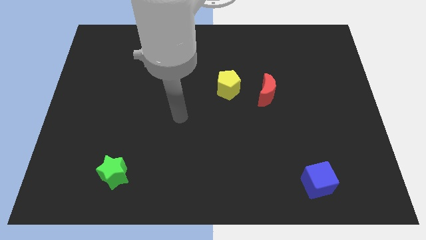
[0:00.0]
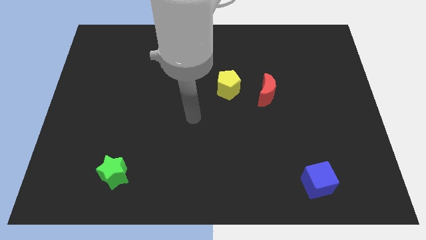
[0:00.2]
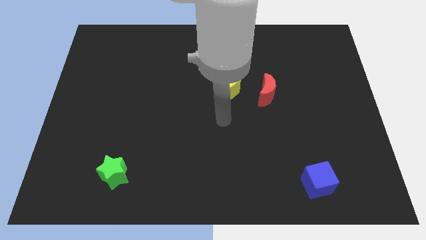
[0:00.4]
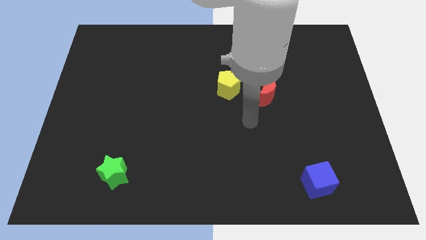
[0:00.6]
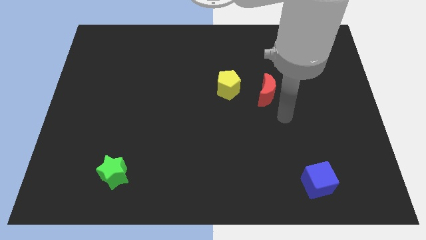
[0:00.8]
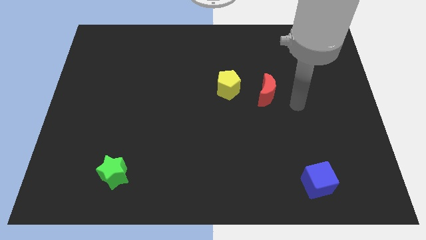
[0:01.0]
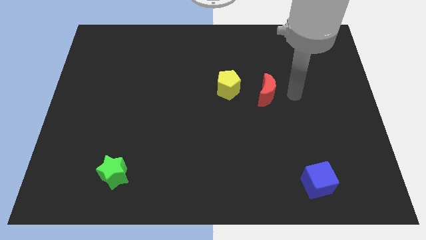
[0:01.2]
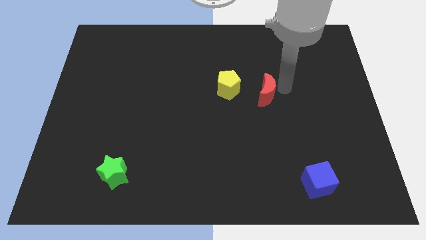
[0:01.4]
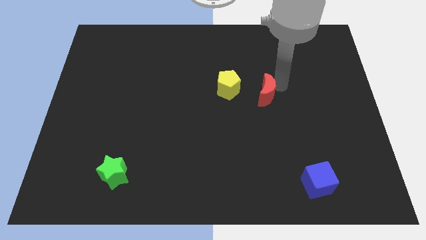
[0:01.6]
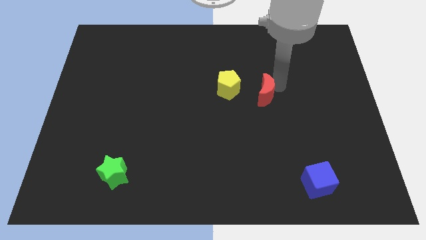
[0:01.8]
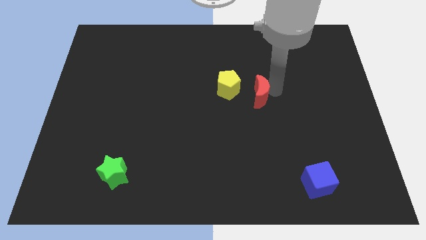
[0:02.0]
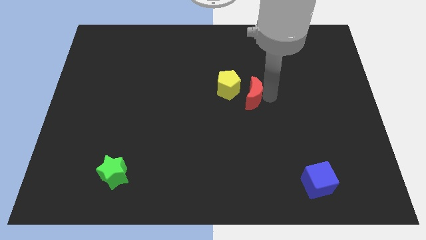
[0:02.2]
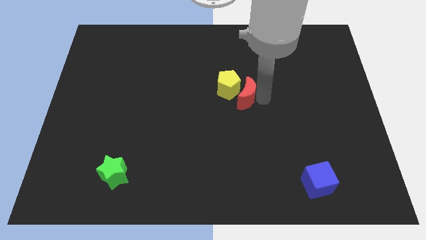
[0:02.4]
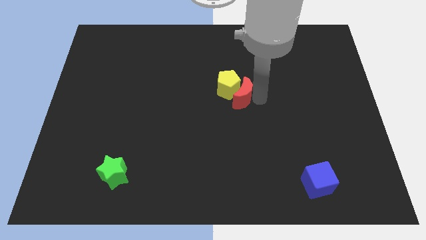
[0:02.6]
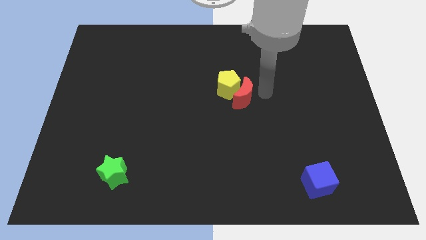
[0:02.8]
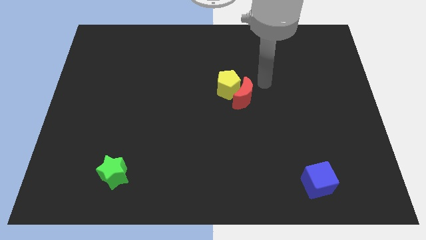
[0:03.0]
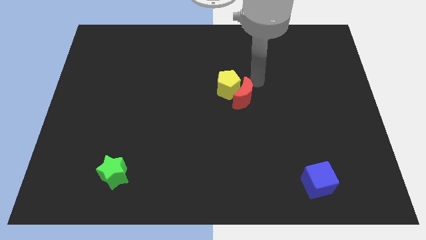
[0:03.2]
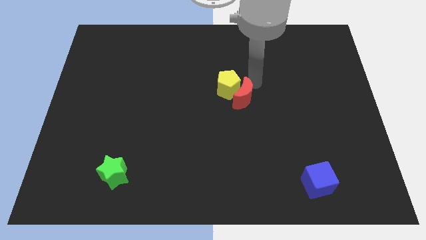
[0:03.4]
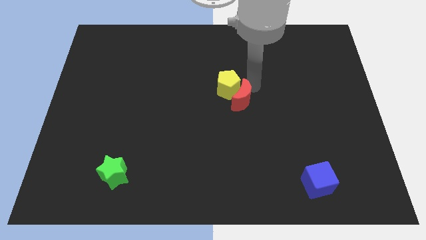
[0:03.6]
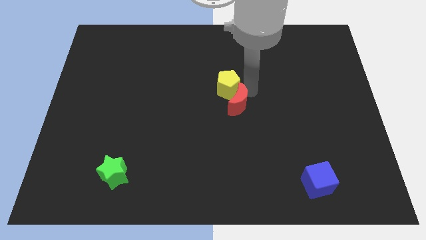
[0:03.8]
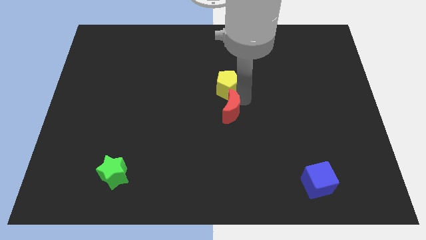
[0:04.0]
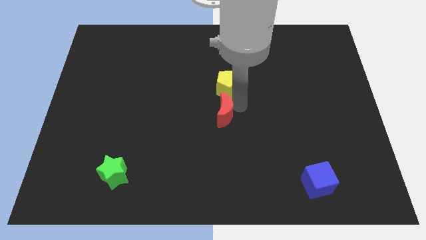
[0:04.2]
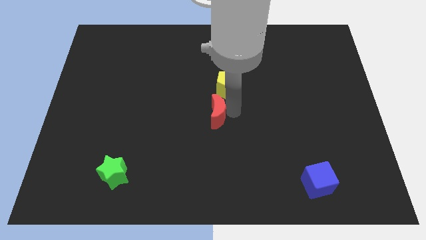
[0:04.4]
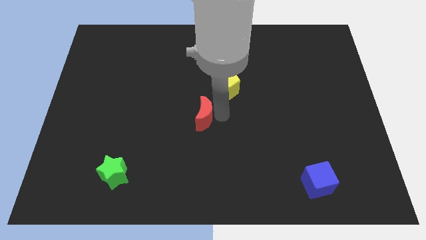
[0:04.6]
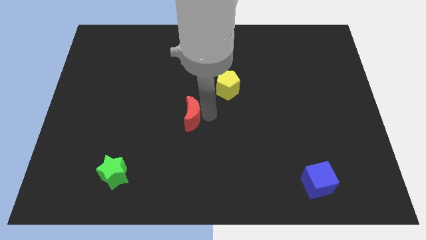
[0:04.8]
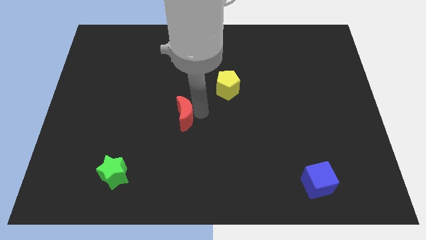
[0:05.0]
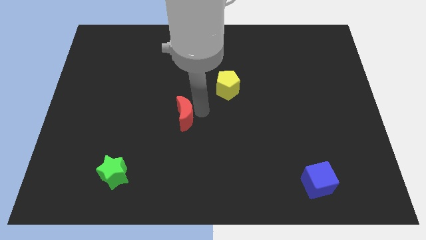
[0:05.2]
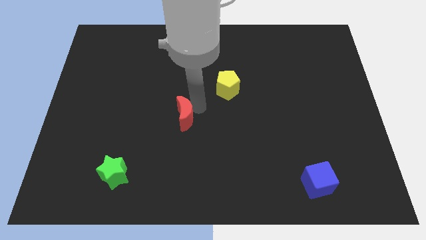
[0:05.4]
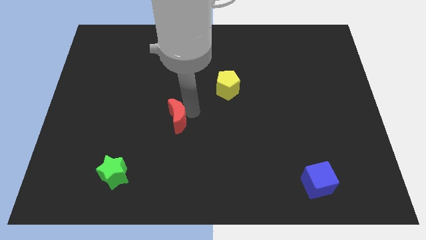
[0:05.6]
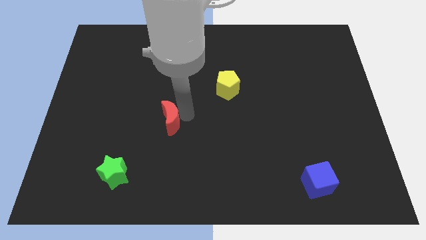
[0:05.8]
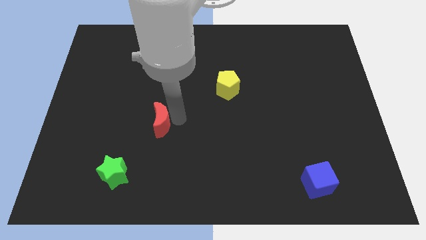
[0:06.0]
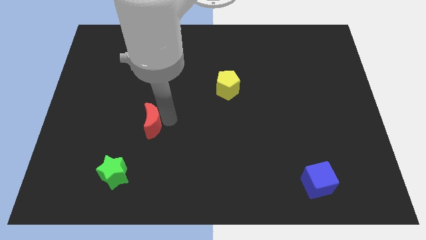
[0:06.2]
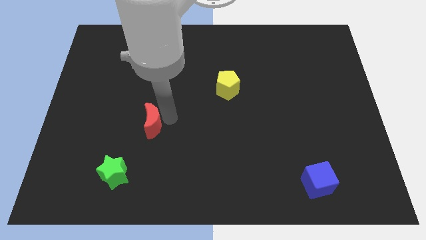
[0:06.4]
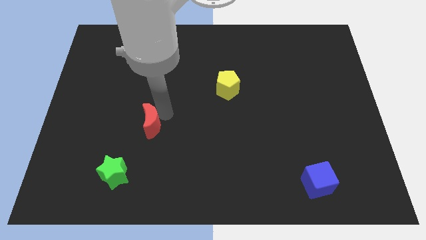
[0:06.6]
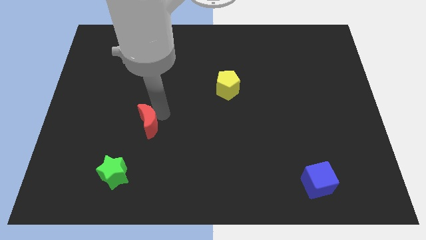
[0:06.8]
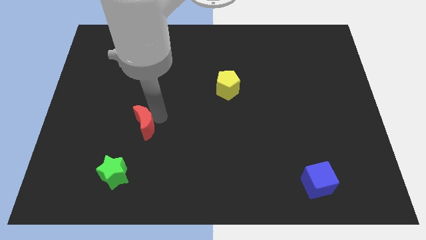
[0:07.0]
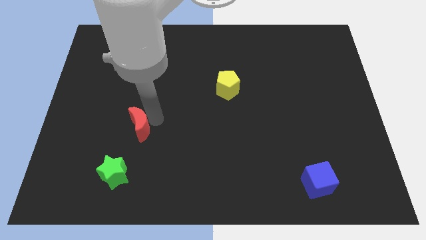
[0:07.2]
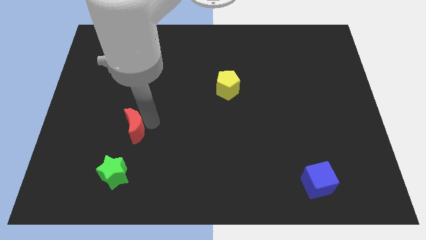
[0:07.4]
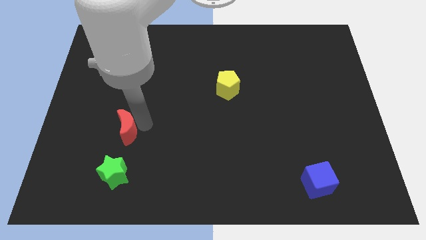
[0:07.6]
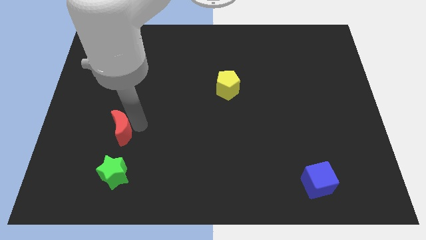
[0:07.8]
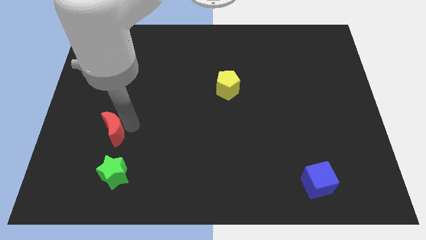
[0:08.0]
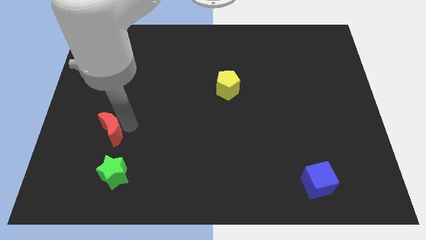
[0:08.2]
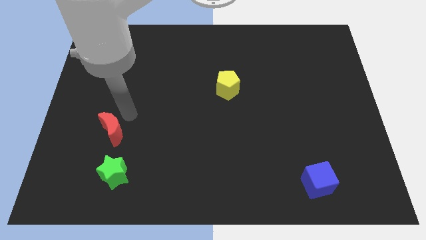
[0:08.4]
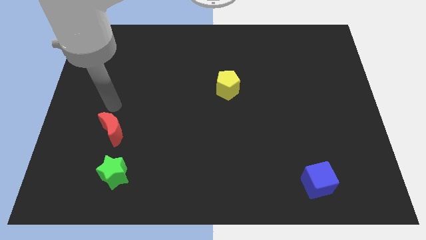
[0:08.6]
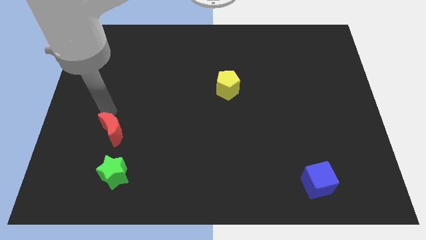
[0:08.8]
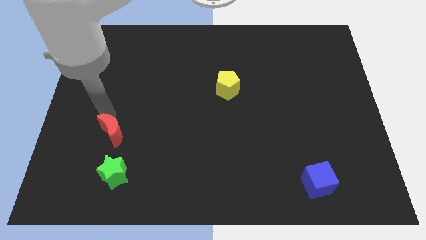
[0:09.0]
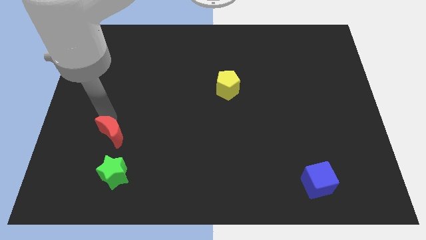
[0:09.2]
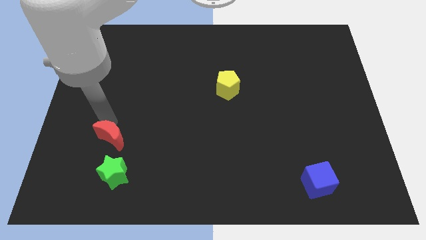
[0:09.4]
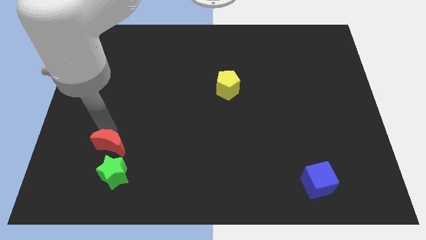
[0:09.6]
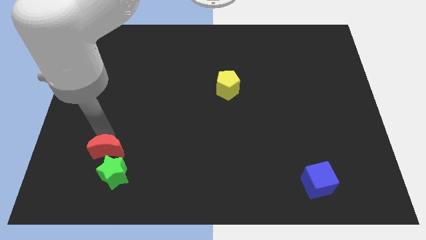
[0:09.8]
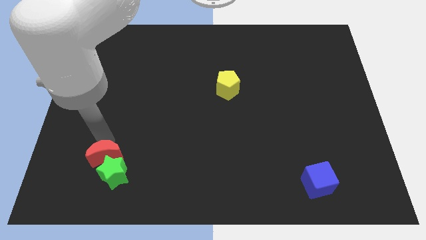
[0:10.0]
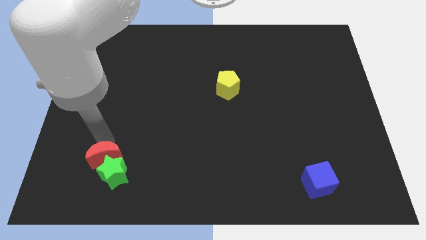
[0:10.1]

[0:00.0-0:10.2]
put the red moon towards the green star

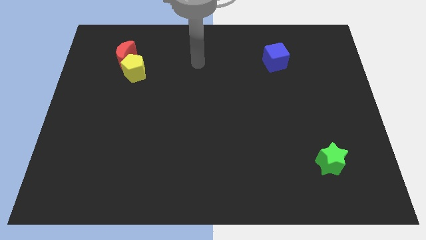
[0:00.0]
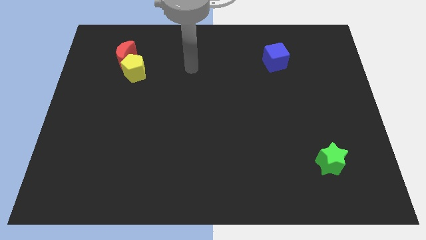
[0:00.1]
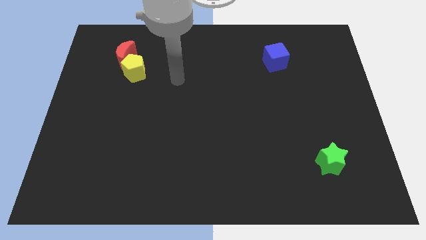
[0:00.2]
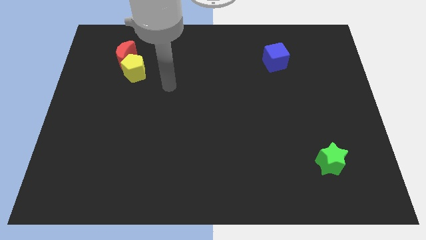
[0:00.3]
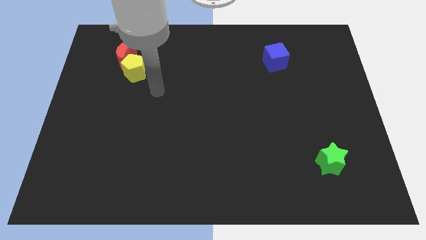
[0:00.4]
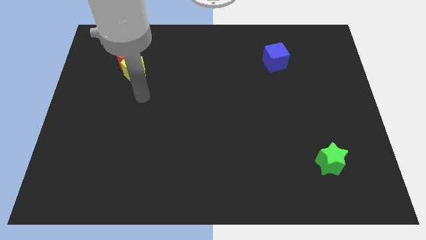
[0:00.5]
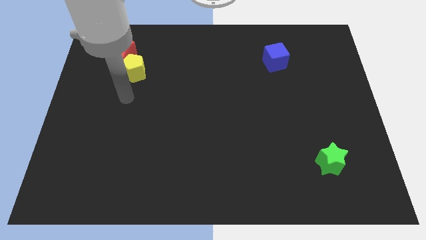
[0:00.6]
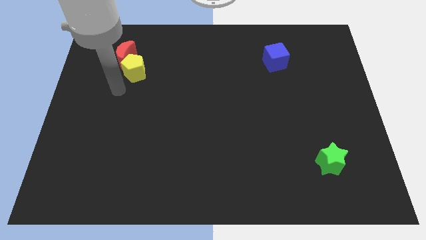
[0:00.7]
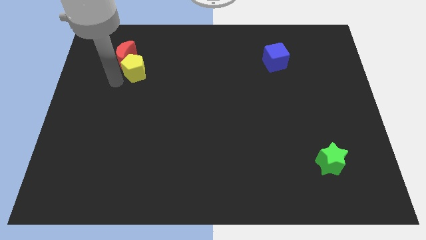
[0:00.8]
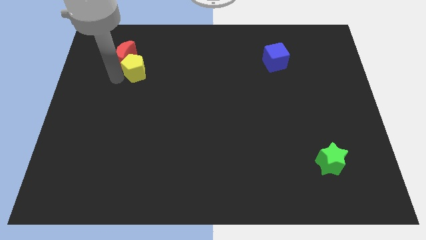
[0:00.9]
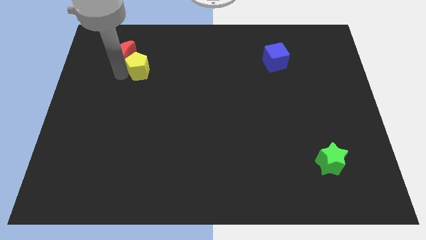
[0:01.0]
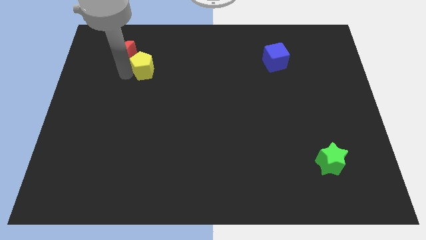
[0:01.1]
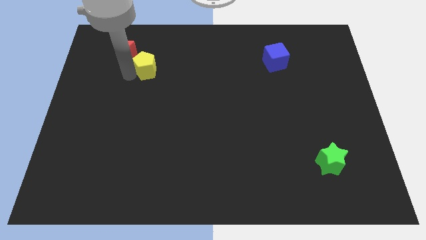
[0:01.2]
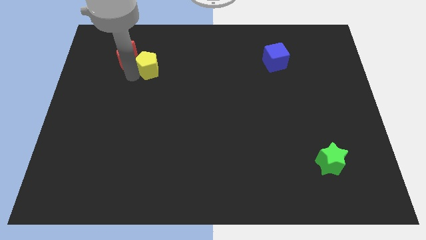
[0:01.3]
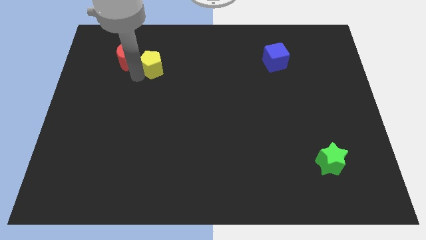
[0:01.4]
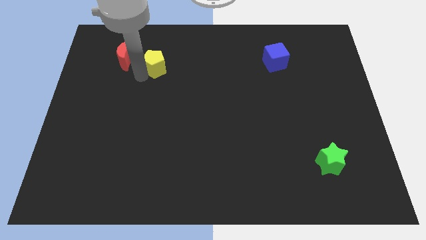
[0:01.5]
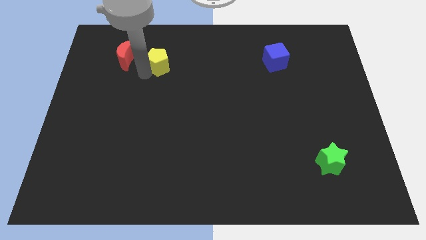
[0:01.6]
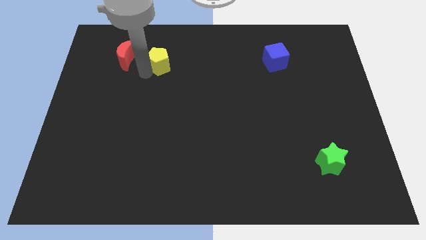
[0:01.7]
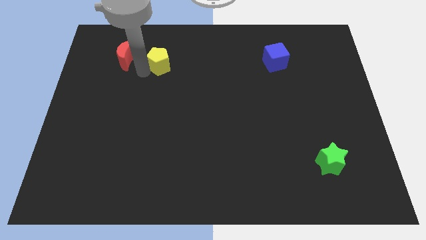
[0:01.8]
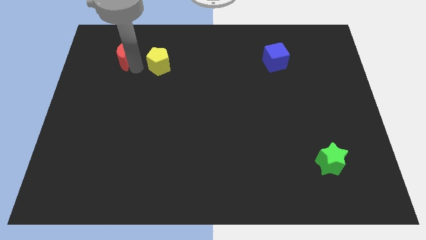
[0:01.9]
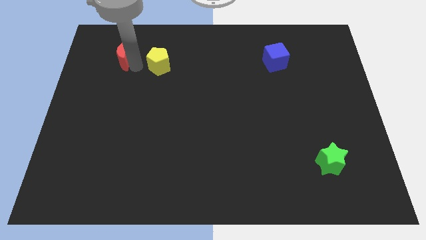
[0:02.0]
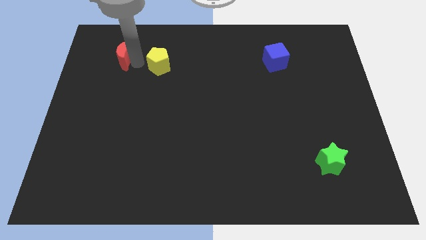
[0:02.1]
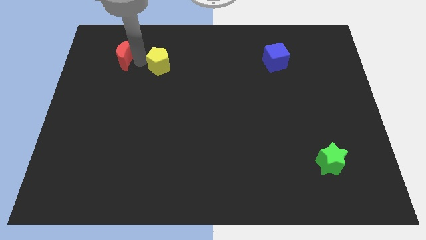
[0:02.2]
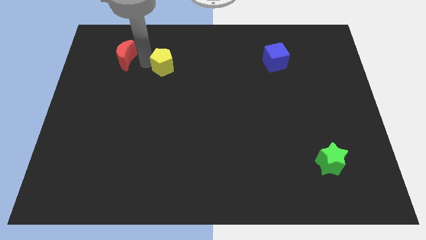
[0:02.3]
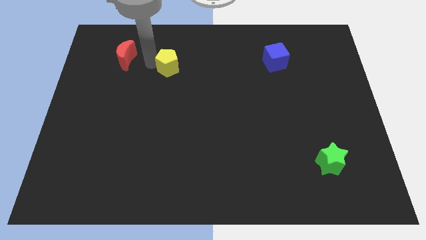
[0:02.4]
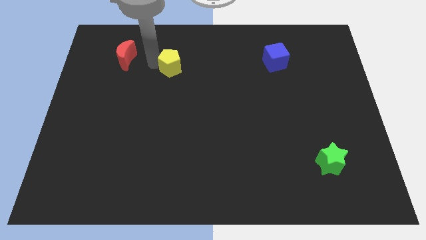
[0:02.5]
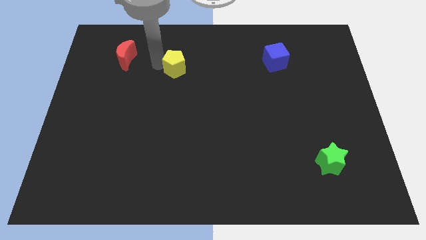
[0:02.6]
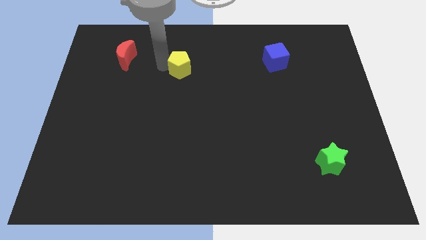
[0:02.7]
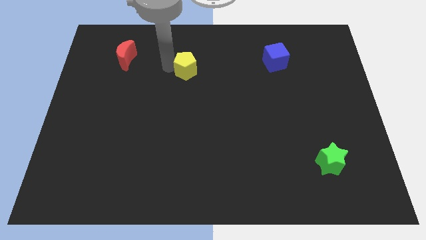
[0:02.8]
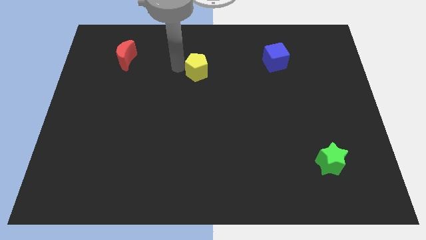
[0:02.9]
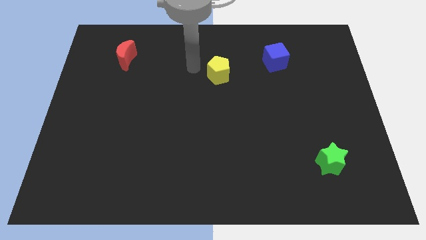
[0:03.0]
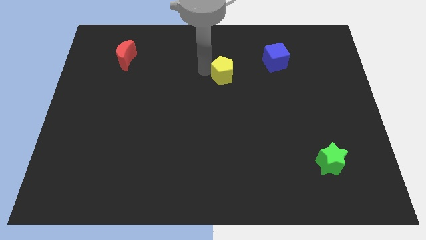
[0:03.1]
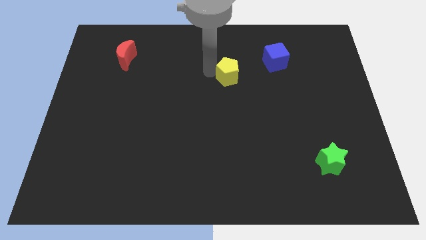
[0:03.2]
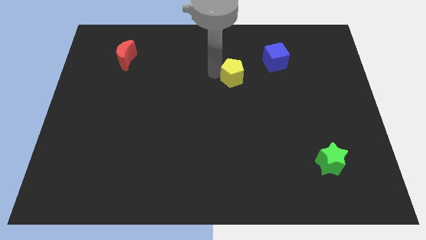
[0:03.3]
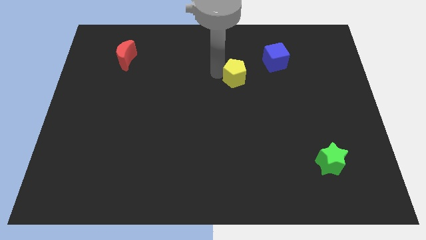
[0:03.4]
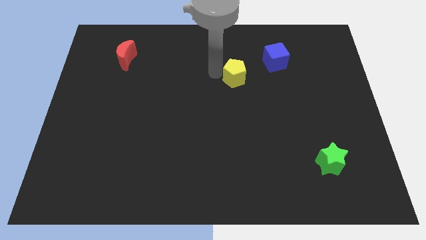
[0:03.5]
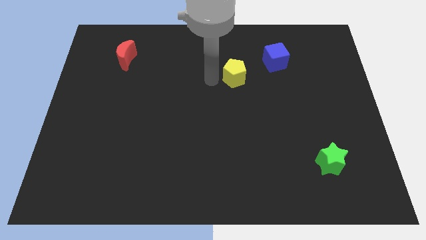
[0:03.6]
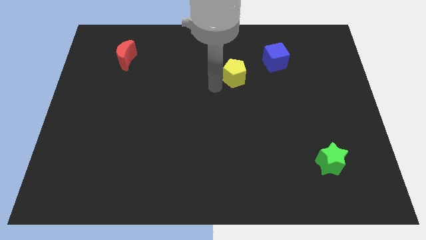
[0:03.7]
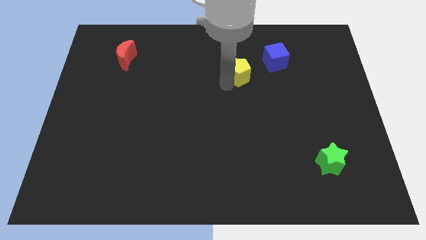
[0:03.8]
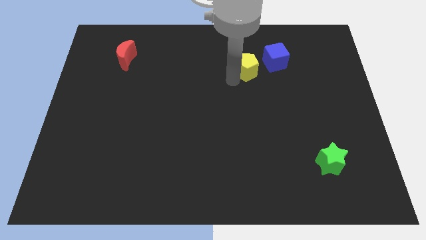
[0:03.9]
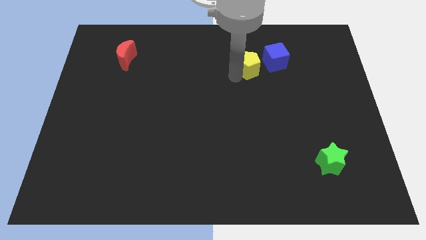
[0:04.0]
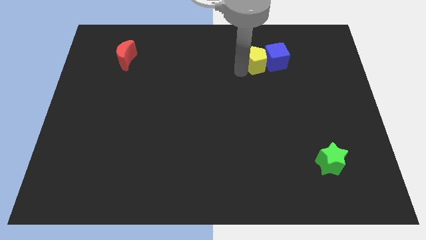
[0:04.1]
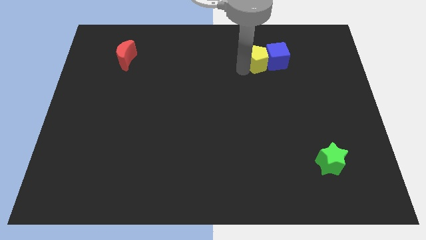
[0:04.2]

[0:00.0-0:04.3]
move the pentagon close to the blue block
